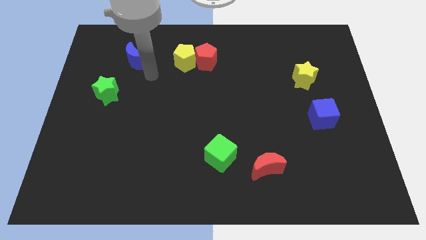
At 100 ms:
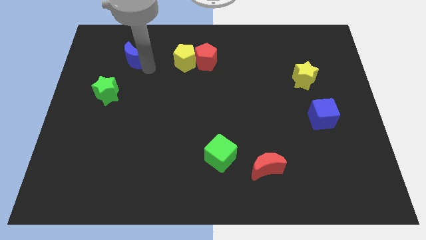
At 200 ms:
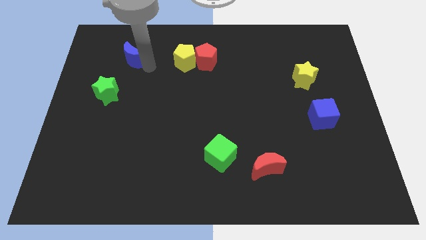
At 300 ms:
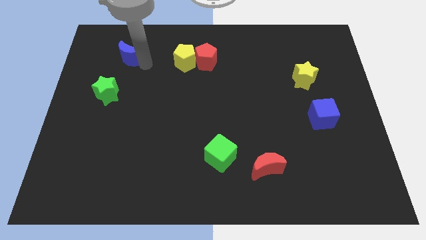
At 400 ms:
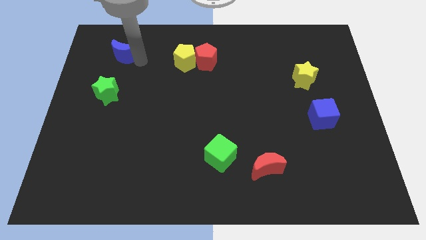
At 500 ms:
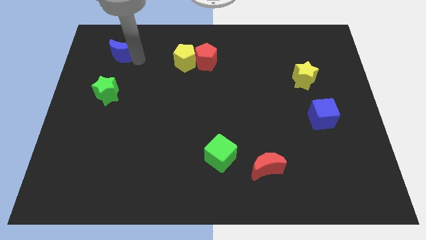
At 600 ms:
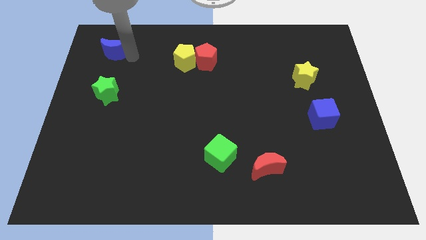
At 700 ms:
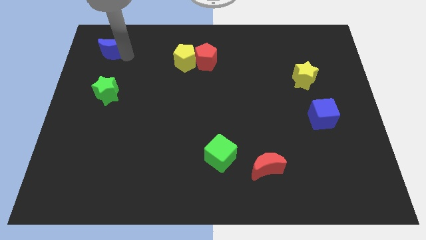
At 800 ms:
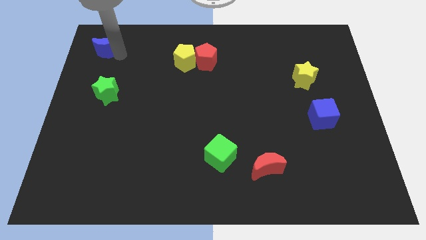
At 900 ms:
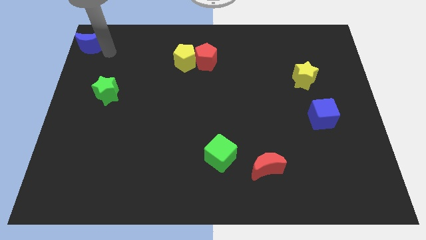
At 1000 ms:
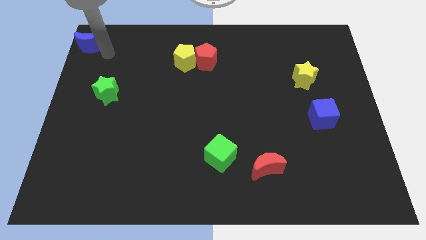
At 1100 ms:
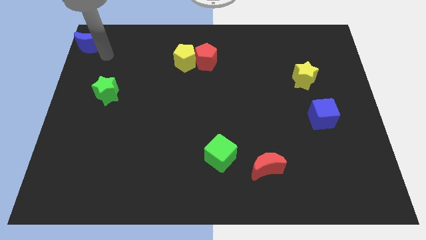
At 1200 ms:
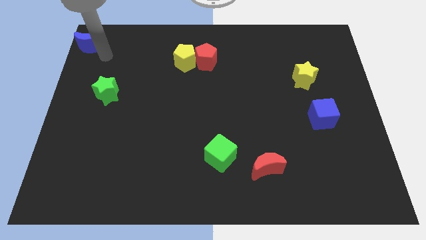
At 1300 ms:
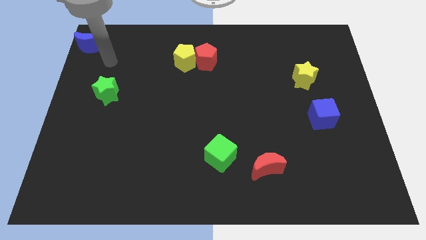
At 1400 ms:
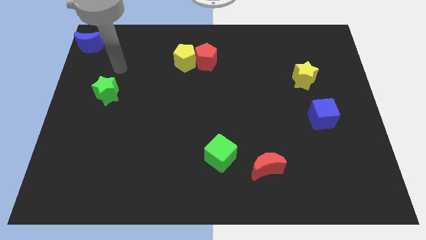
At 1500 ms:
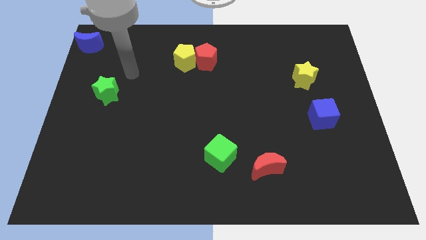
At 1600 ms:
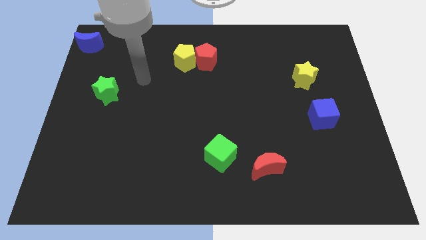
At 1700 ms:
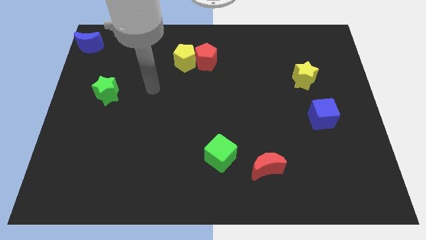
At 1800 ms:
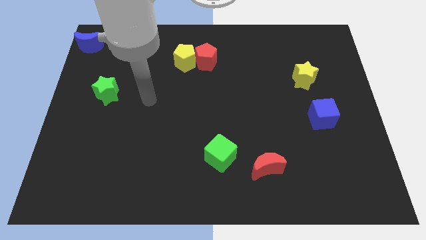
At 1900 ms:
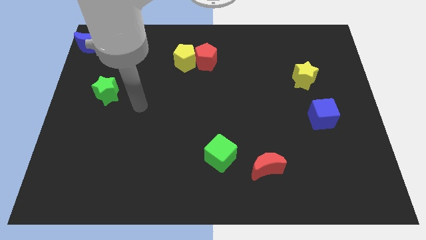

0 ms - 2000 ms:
move the blue crescent to the top left corner of the board

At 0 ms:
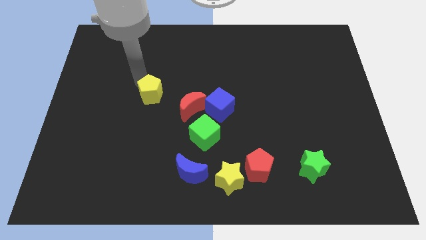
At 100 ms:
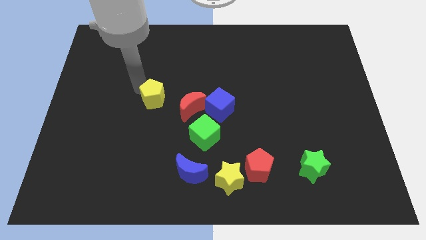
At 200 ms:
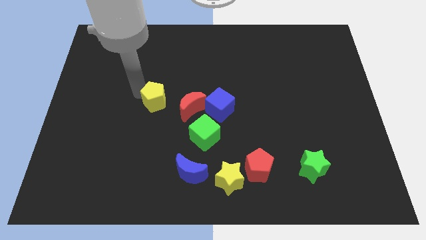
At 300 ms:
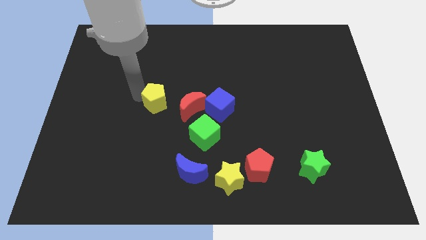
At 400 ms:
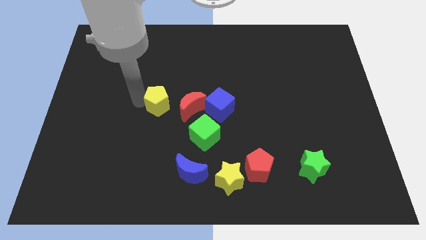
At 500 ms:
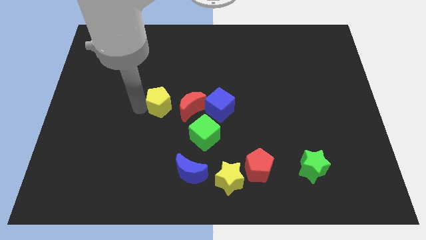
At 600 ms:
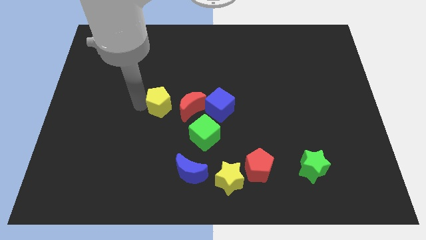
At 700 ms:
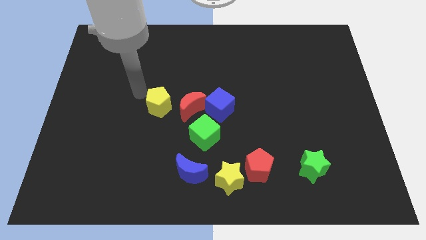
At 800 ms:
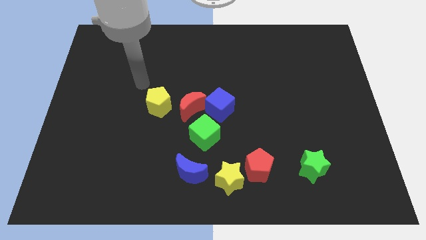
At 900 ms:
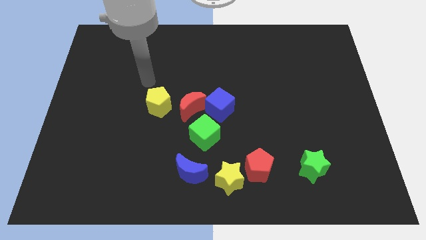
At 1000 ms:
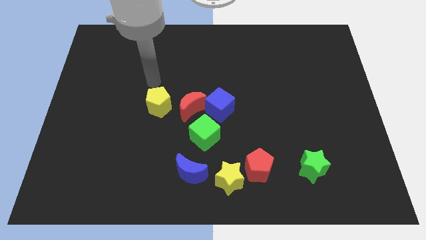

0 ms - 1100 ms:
move the yellow pentagon into group of elements

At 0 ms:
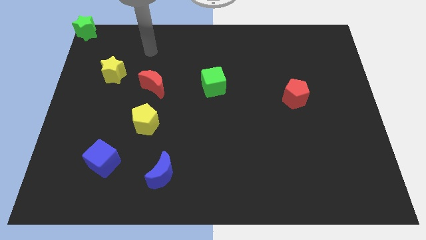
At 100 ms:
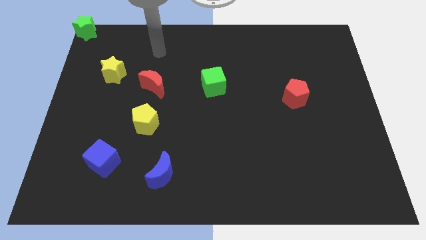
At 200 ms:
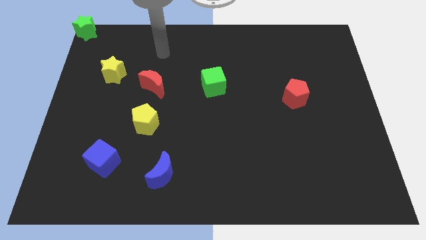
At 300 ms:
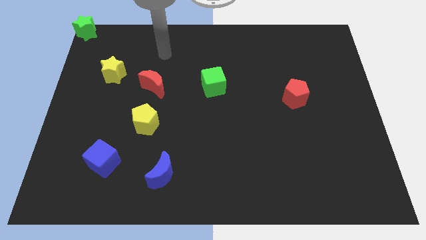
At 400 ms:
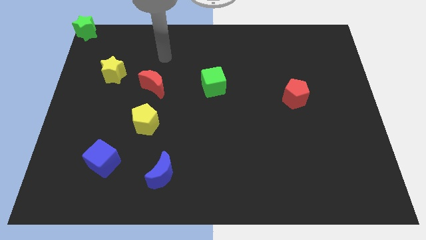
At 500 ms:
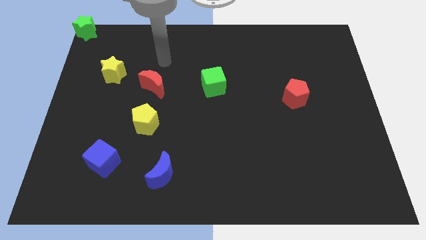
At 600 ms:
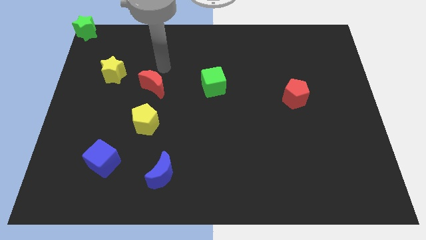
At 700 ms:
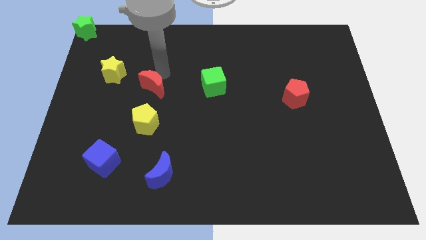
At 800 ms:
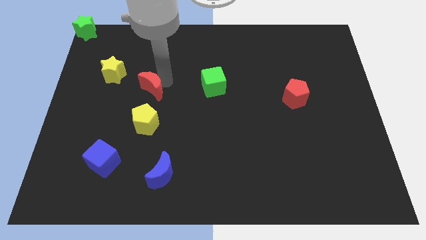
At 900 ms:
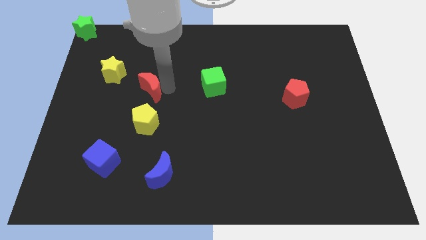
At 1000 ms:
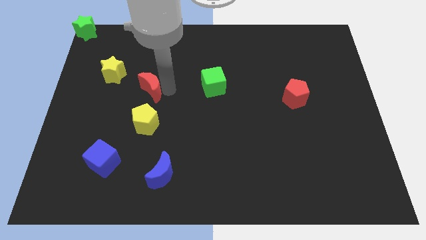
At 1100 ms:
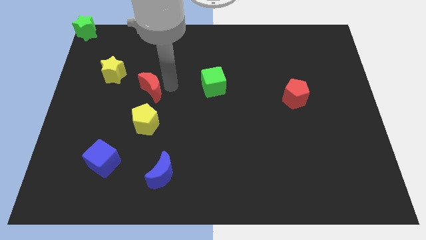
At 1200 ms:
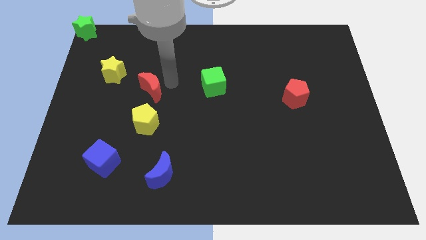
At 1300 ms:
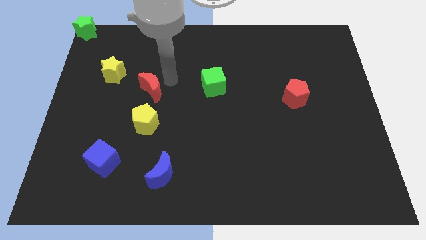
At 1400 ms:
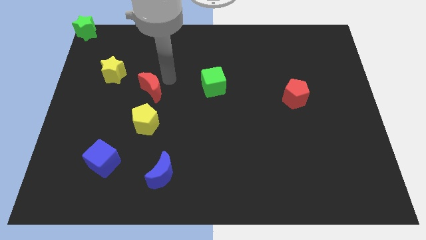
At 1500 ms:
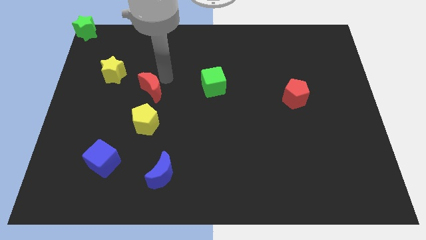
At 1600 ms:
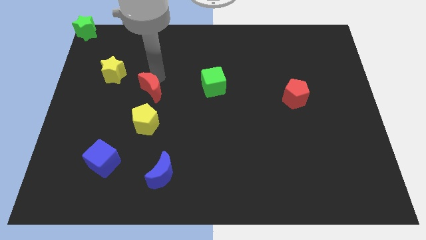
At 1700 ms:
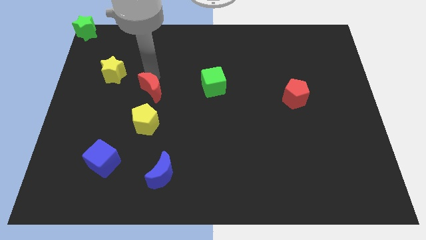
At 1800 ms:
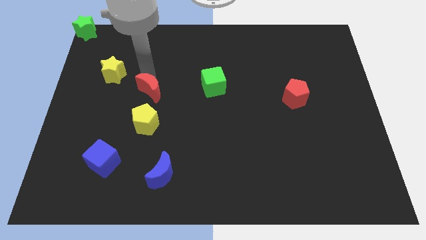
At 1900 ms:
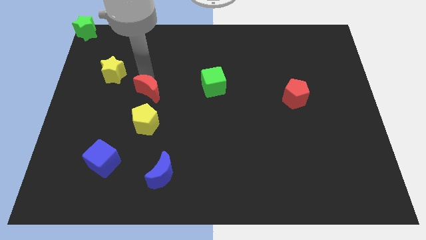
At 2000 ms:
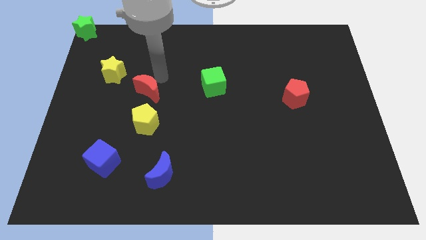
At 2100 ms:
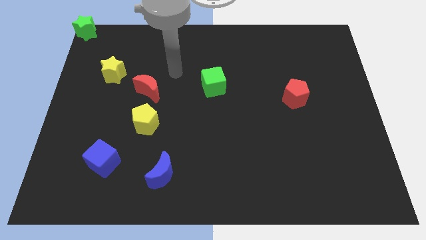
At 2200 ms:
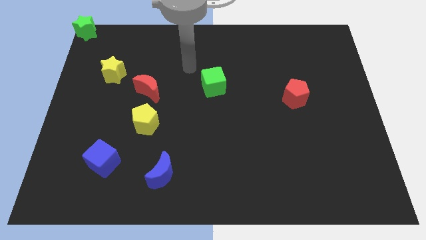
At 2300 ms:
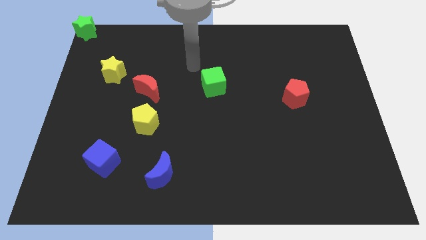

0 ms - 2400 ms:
slightly move the red half moon

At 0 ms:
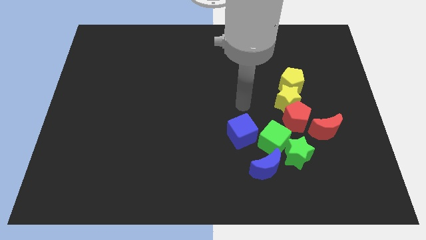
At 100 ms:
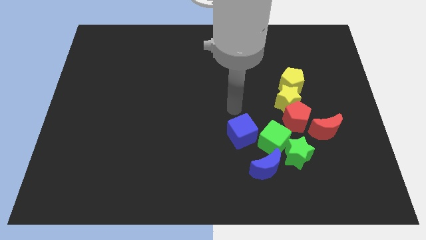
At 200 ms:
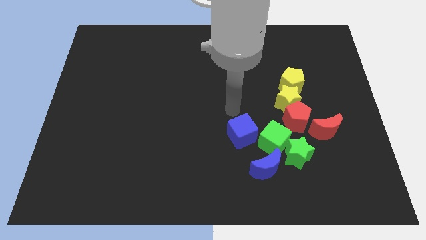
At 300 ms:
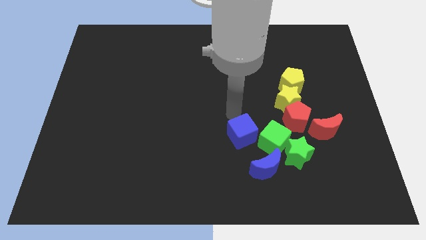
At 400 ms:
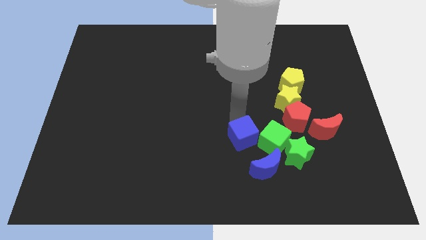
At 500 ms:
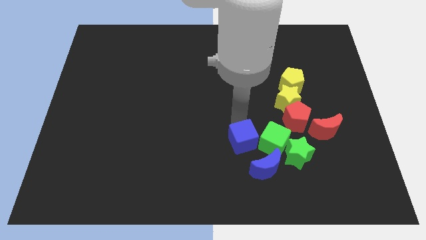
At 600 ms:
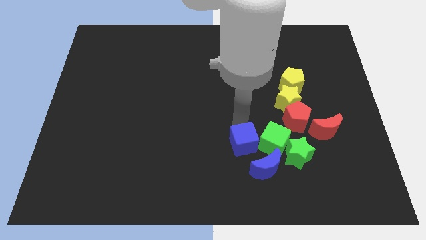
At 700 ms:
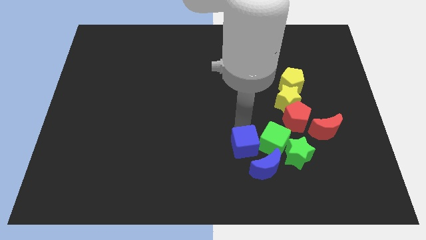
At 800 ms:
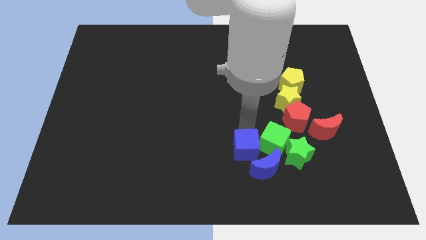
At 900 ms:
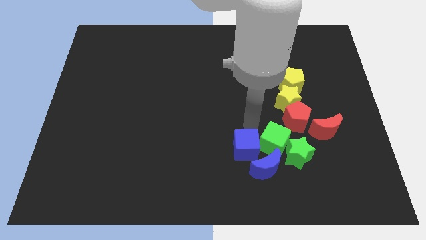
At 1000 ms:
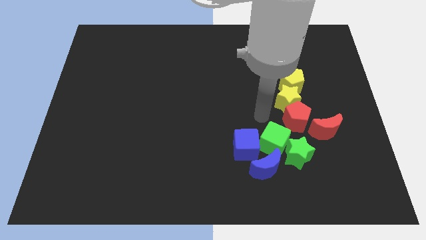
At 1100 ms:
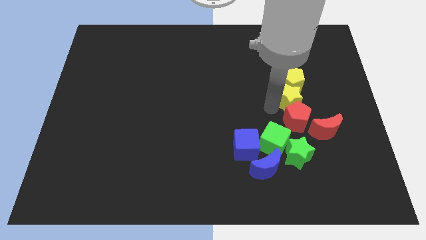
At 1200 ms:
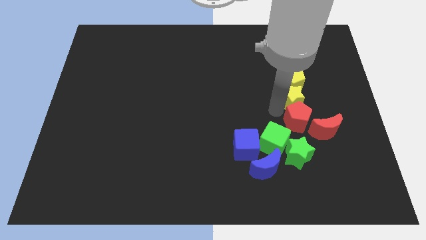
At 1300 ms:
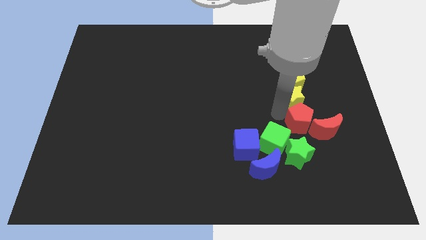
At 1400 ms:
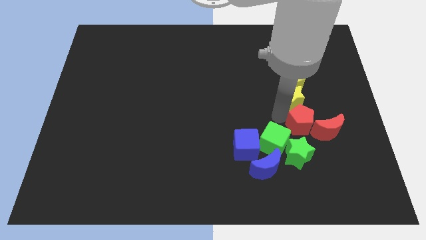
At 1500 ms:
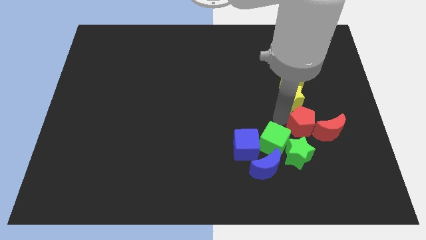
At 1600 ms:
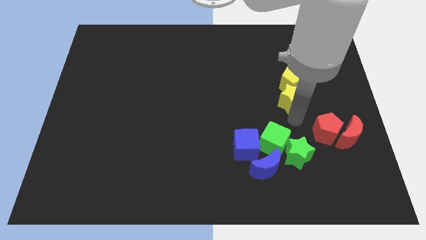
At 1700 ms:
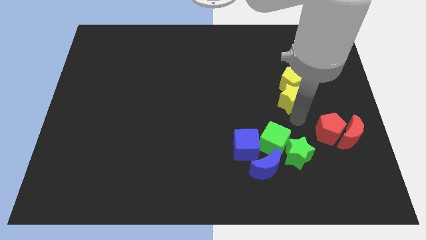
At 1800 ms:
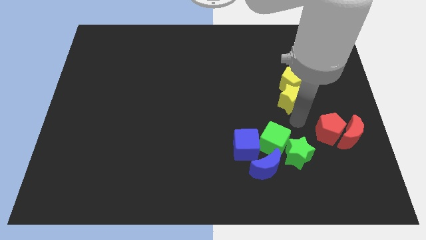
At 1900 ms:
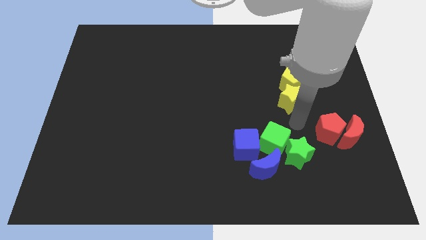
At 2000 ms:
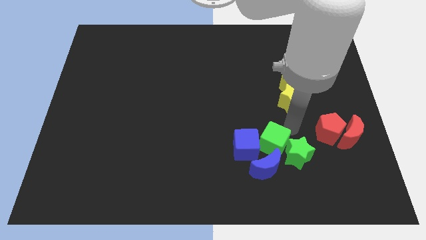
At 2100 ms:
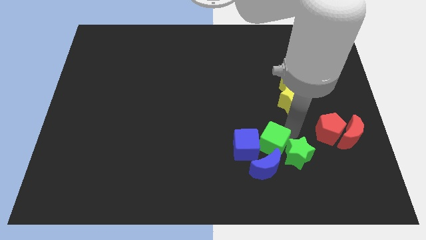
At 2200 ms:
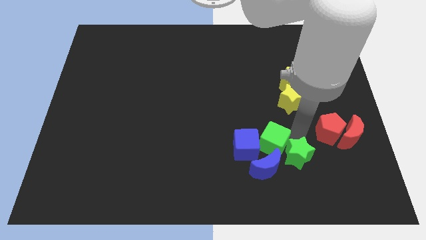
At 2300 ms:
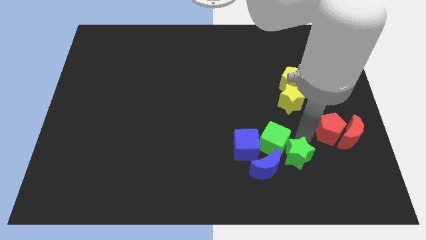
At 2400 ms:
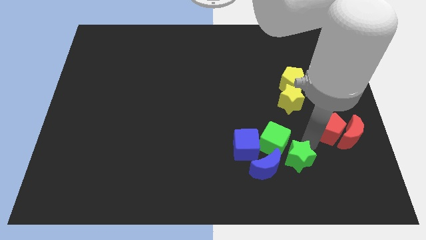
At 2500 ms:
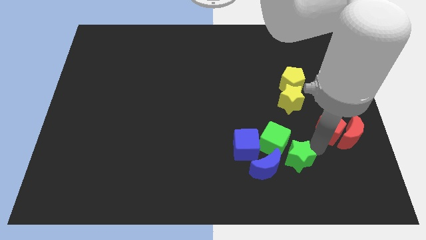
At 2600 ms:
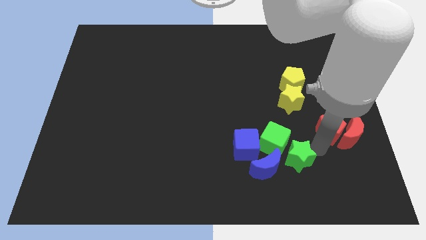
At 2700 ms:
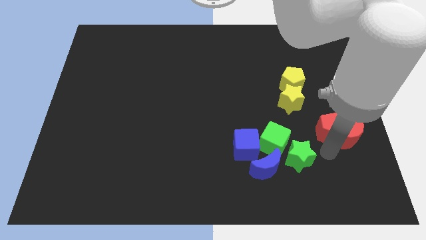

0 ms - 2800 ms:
move the red pentagon into red moon

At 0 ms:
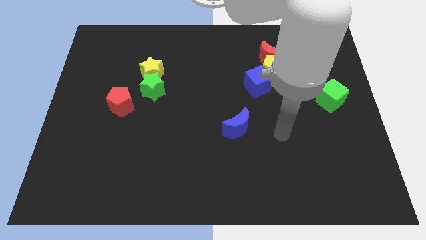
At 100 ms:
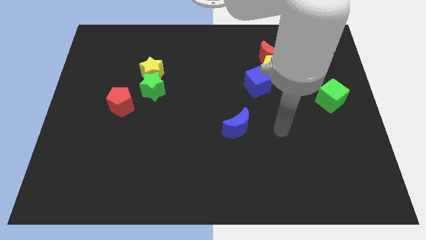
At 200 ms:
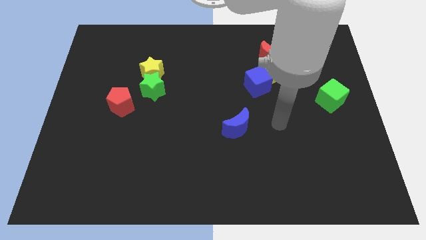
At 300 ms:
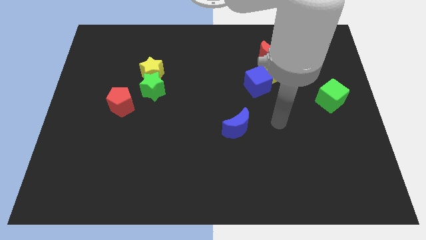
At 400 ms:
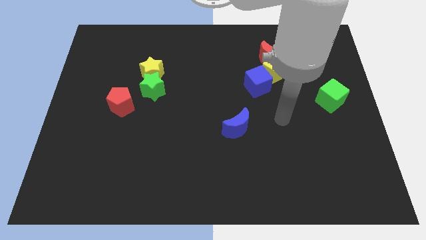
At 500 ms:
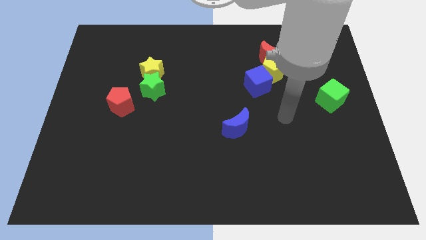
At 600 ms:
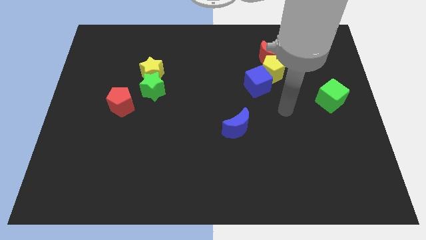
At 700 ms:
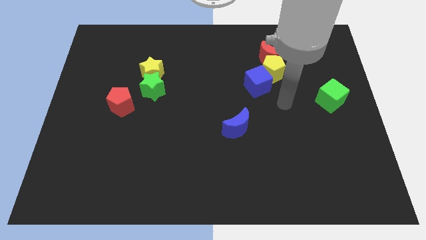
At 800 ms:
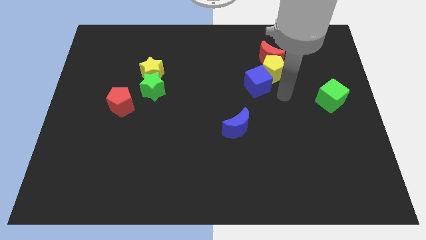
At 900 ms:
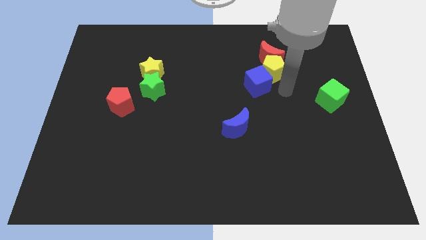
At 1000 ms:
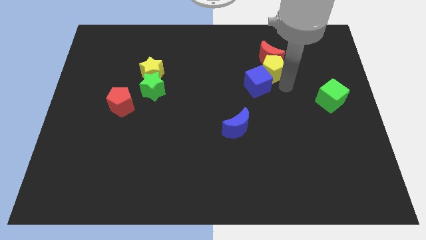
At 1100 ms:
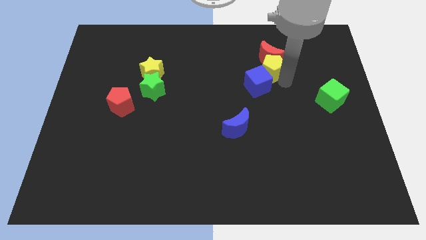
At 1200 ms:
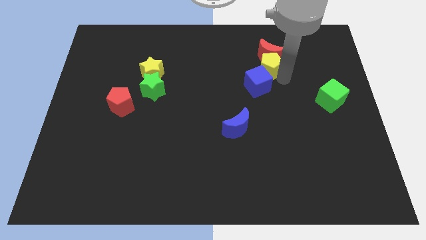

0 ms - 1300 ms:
go and touch the right side of the yellow pentagon
